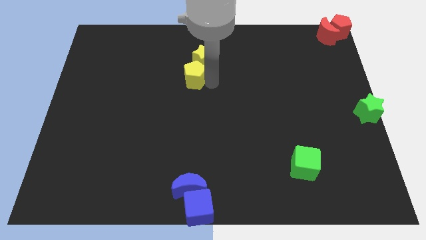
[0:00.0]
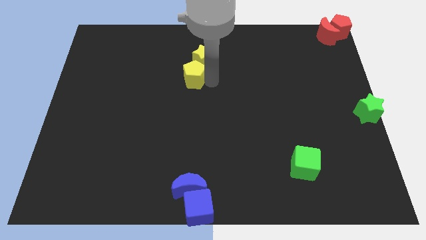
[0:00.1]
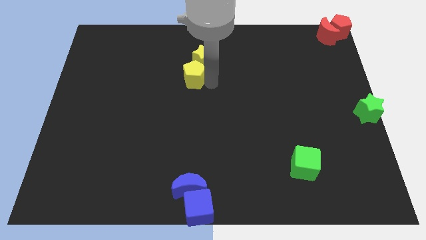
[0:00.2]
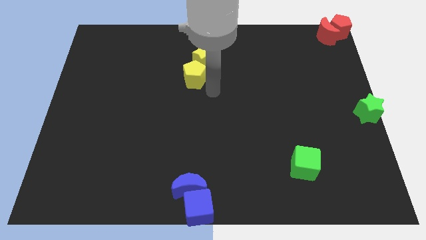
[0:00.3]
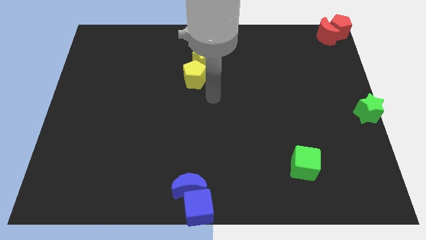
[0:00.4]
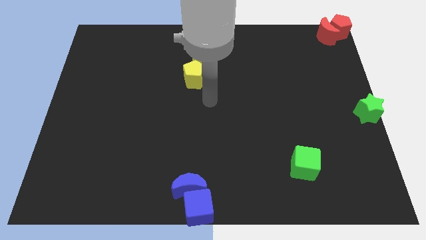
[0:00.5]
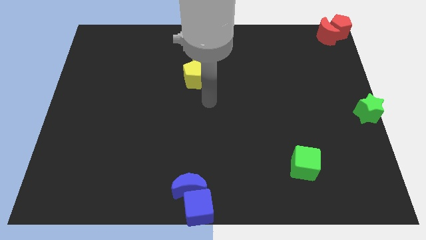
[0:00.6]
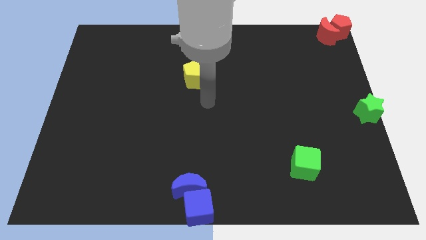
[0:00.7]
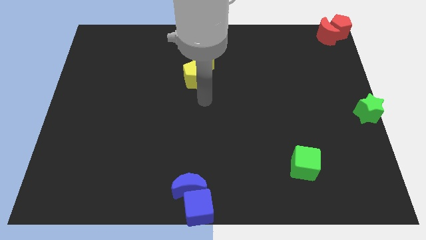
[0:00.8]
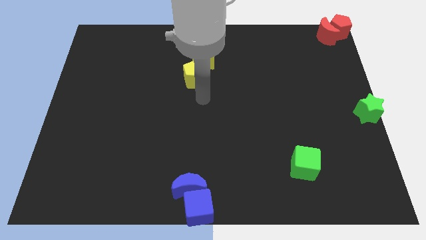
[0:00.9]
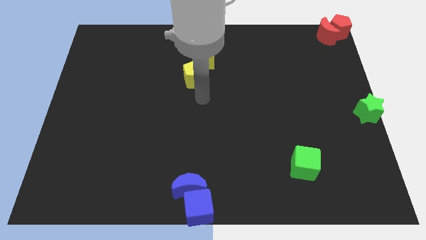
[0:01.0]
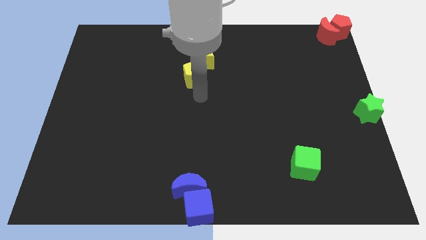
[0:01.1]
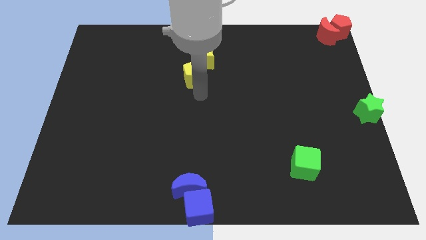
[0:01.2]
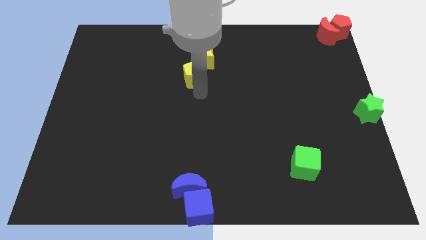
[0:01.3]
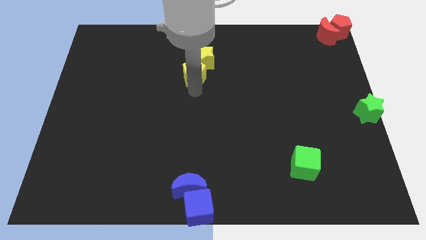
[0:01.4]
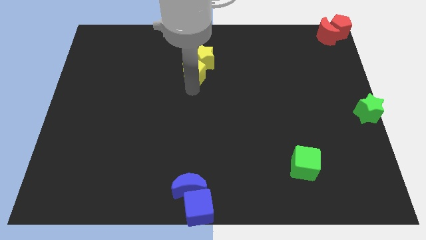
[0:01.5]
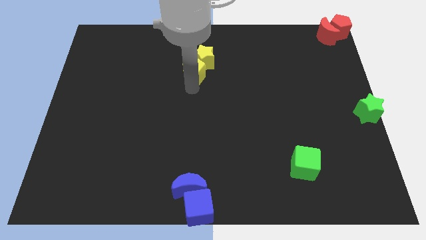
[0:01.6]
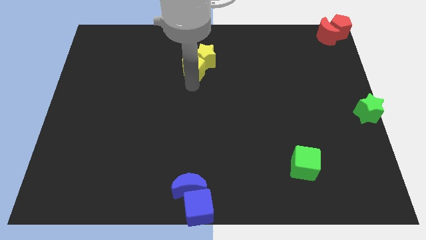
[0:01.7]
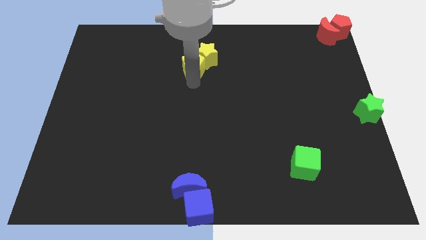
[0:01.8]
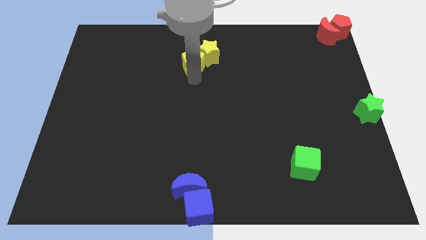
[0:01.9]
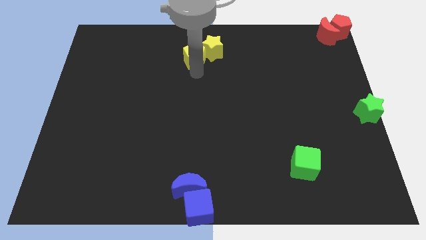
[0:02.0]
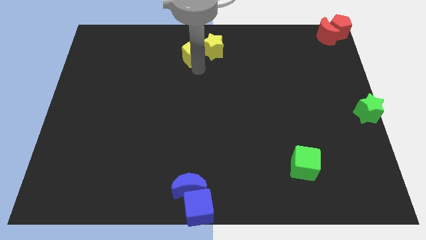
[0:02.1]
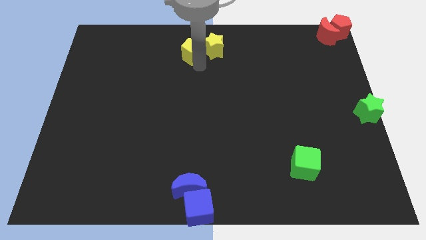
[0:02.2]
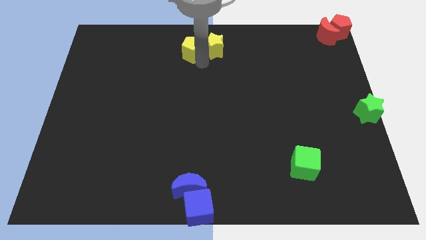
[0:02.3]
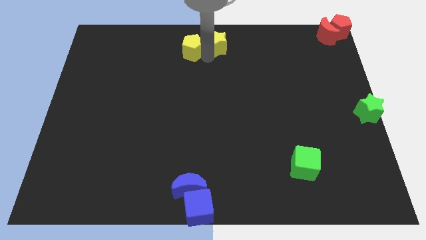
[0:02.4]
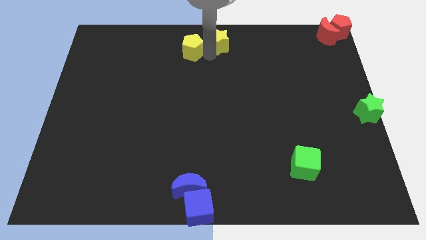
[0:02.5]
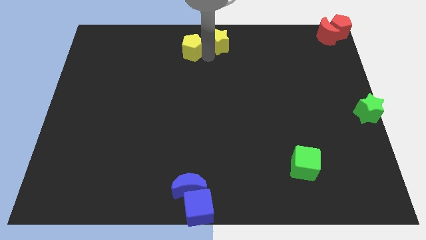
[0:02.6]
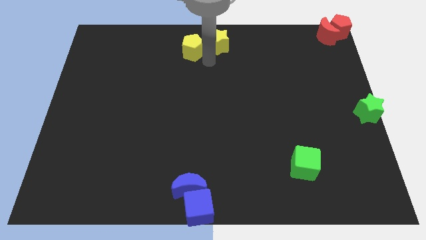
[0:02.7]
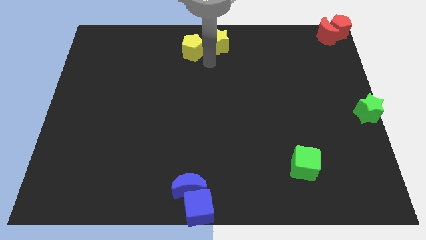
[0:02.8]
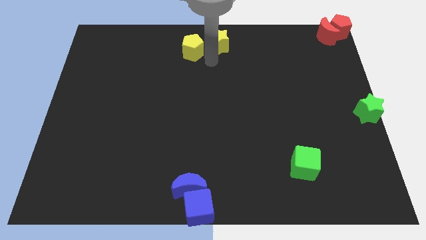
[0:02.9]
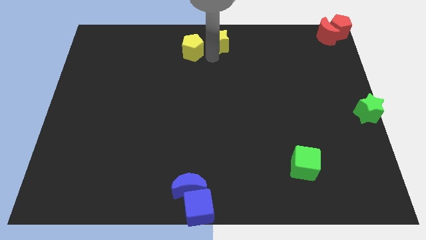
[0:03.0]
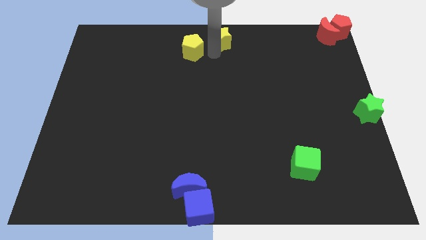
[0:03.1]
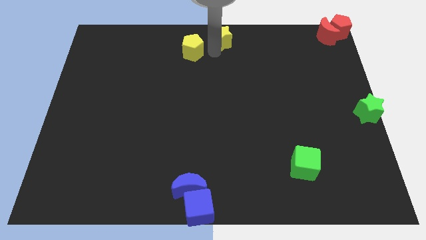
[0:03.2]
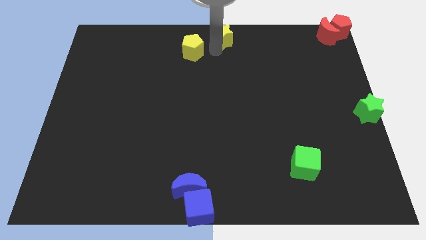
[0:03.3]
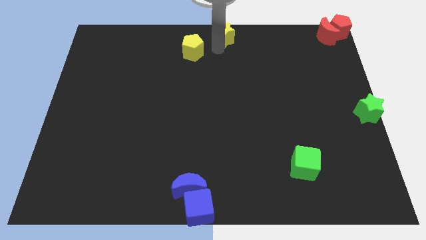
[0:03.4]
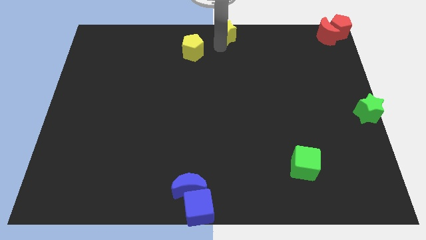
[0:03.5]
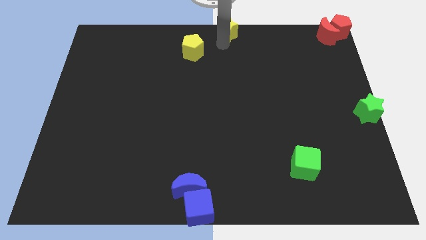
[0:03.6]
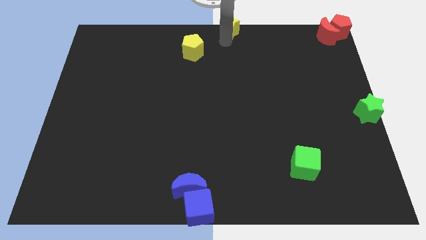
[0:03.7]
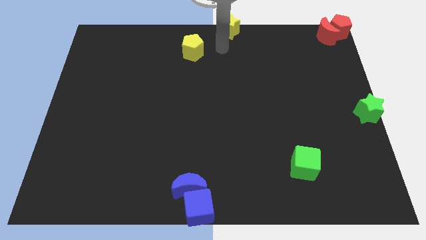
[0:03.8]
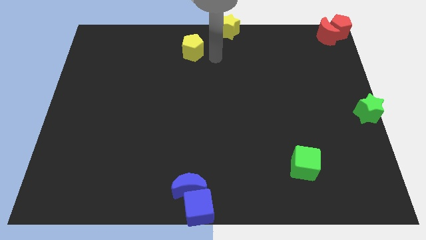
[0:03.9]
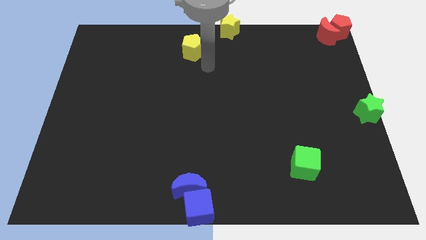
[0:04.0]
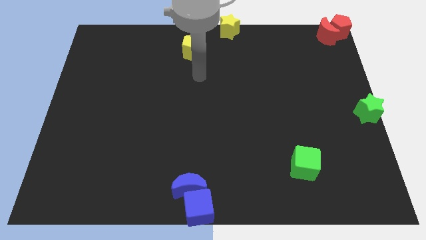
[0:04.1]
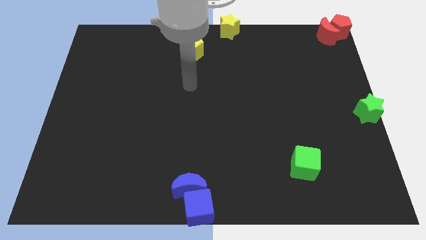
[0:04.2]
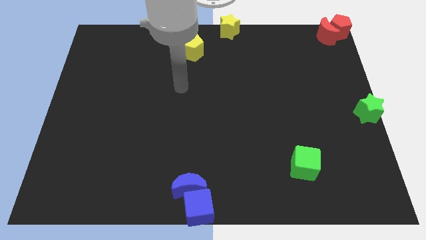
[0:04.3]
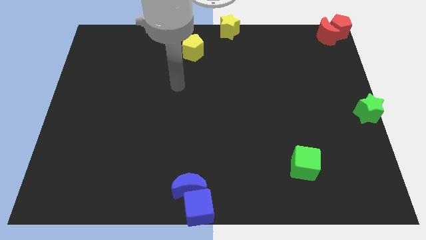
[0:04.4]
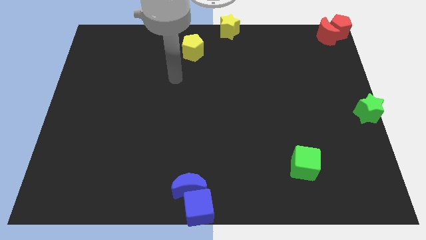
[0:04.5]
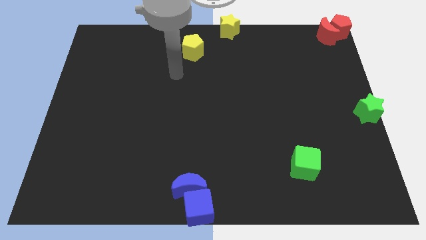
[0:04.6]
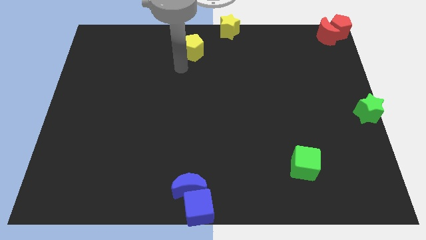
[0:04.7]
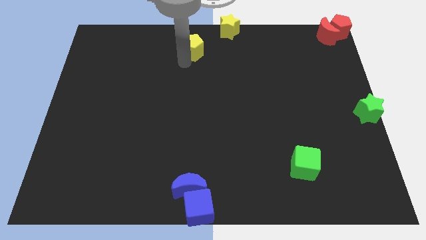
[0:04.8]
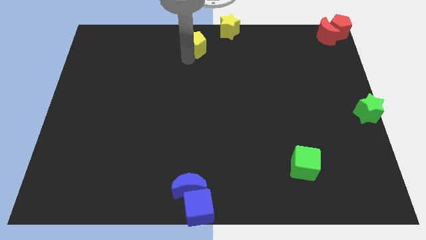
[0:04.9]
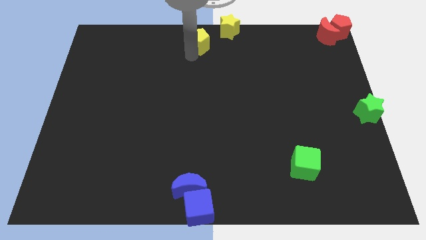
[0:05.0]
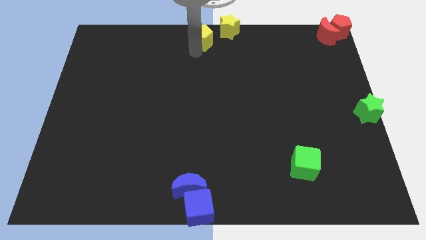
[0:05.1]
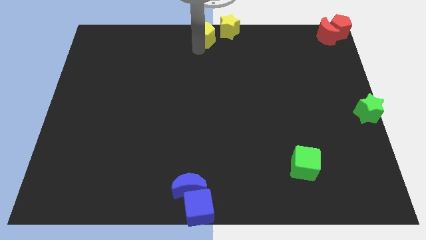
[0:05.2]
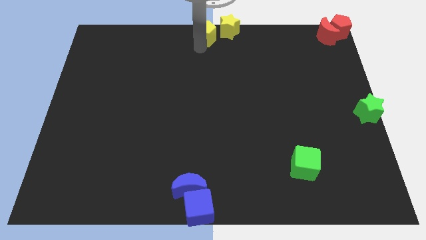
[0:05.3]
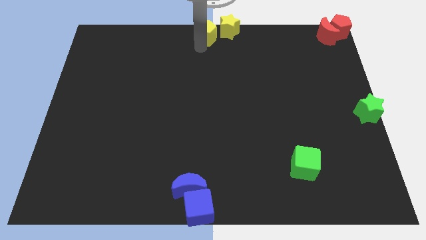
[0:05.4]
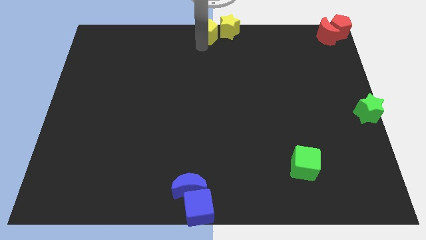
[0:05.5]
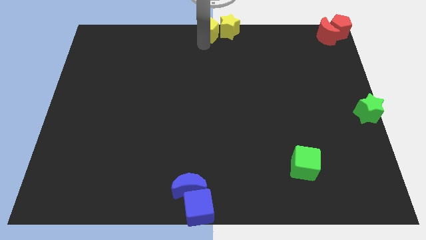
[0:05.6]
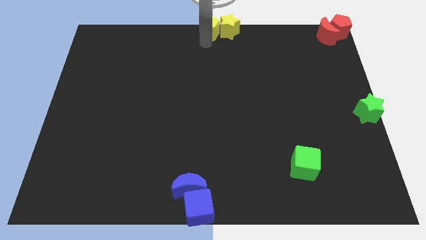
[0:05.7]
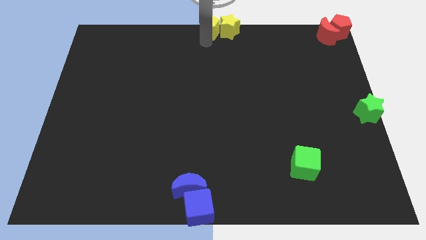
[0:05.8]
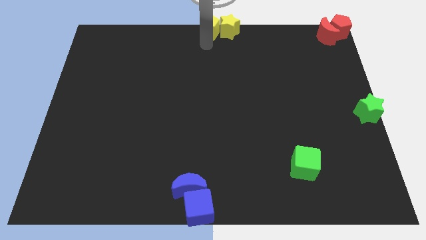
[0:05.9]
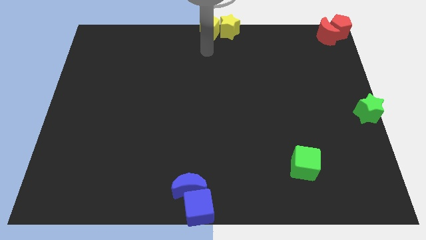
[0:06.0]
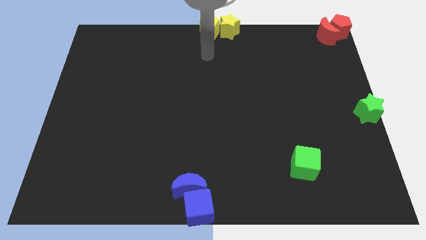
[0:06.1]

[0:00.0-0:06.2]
push yellow star yellow pentagon towards the top center of the board

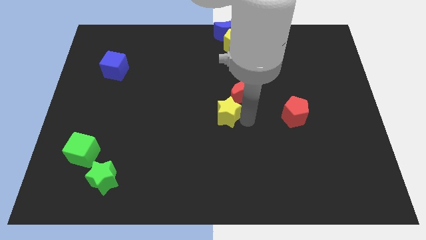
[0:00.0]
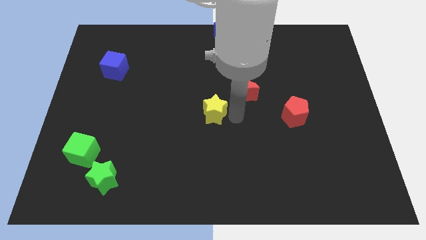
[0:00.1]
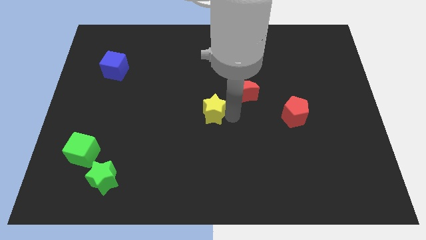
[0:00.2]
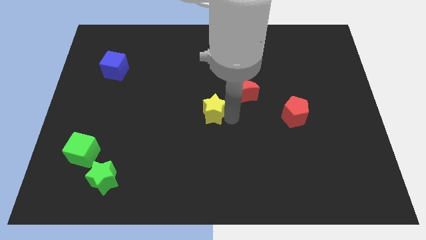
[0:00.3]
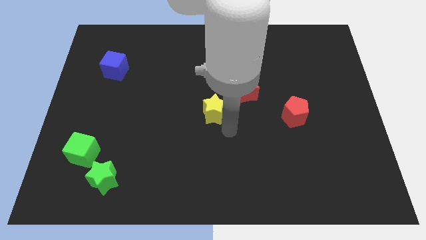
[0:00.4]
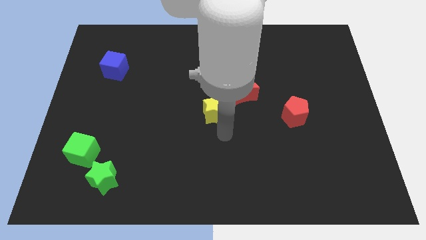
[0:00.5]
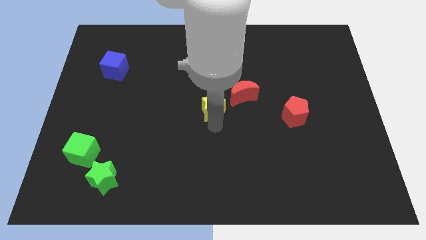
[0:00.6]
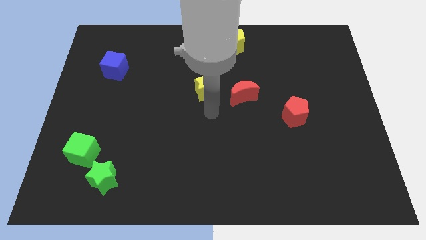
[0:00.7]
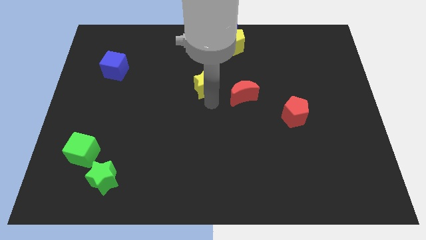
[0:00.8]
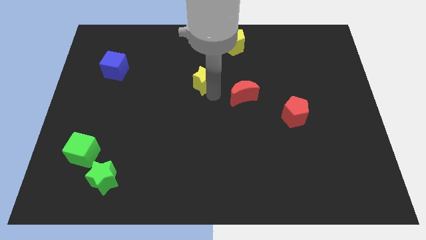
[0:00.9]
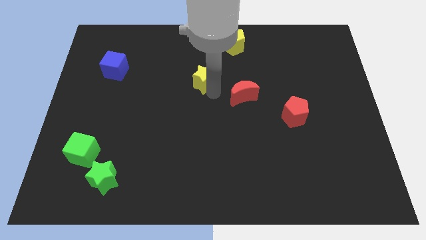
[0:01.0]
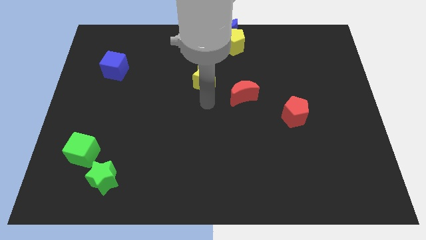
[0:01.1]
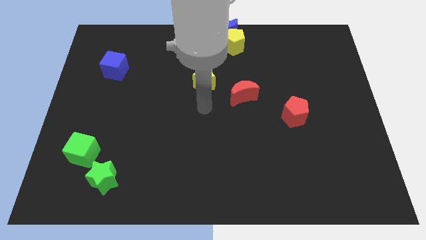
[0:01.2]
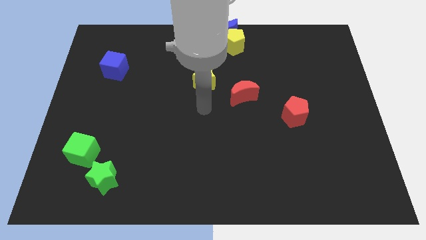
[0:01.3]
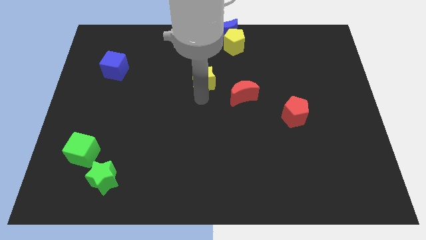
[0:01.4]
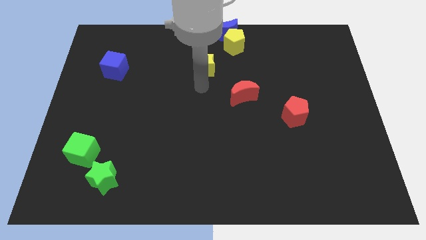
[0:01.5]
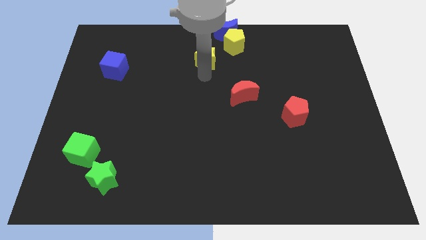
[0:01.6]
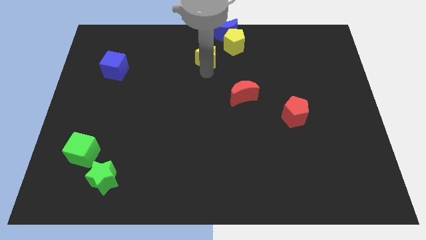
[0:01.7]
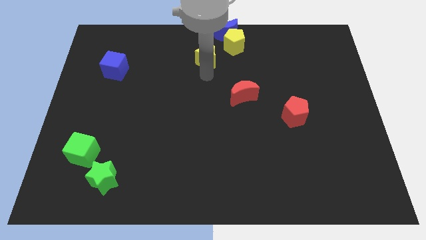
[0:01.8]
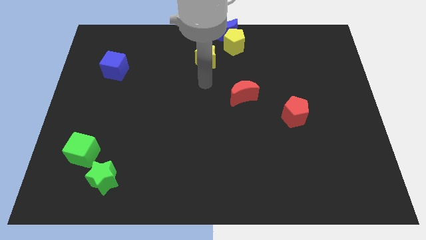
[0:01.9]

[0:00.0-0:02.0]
push the yellow star towards the yellow pentagon

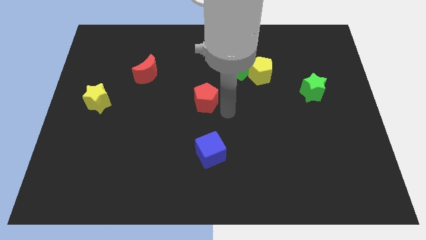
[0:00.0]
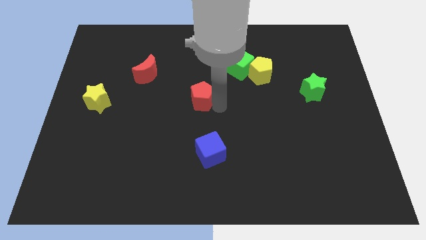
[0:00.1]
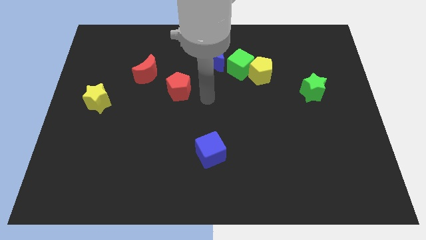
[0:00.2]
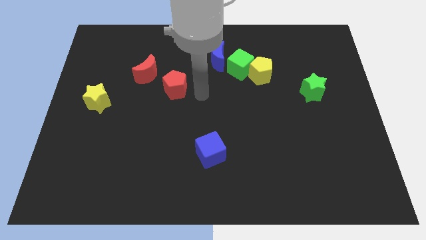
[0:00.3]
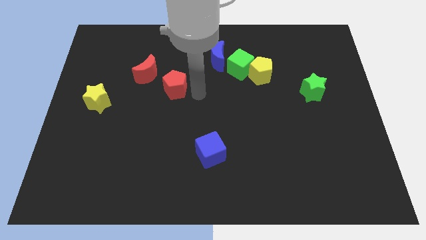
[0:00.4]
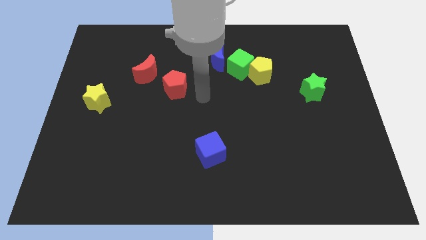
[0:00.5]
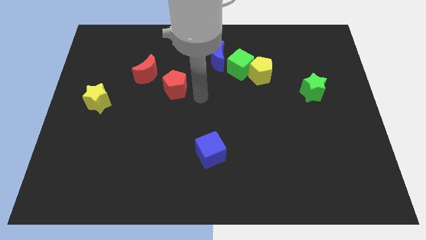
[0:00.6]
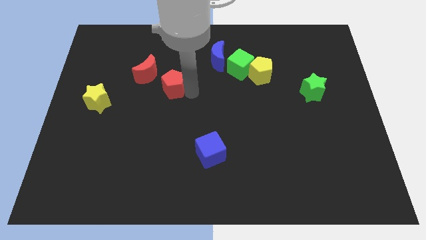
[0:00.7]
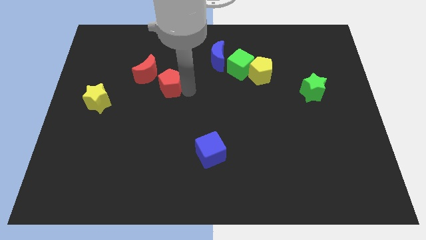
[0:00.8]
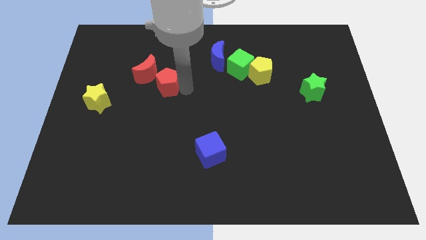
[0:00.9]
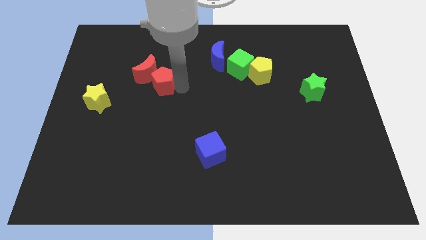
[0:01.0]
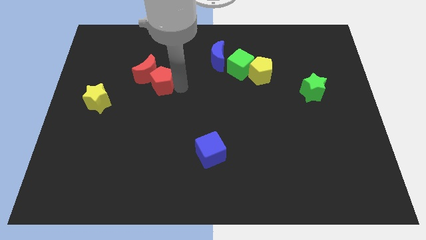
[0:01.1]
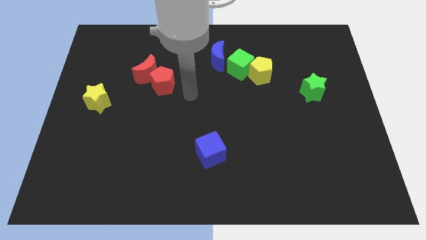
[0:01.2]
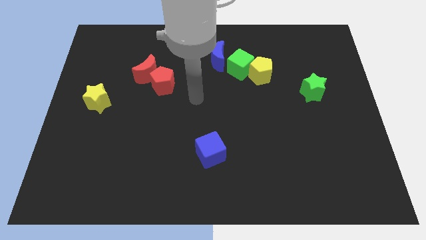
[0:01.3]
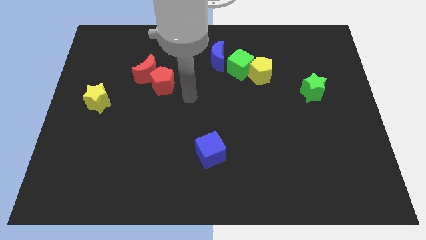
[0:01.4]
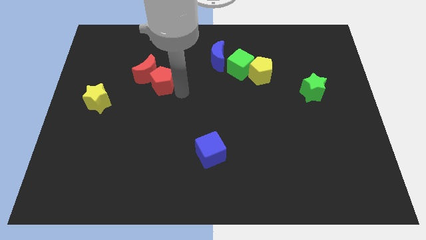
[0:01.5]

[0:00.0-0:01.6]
move the red pentagon into red moon
